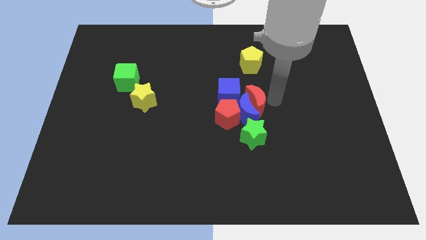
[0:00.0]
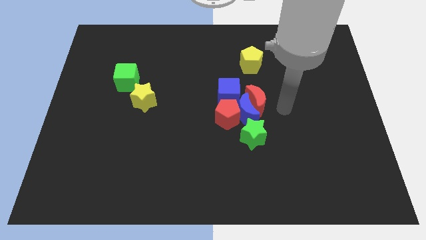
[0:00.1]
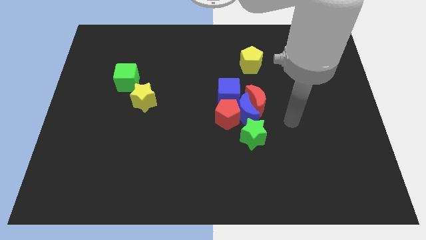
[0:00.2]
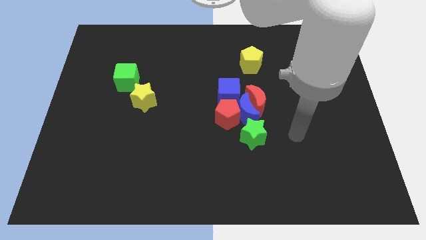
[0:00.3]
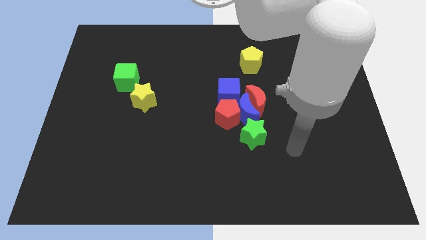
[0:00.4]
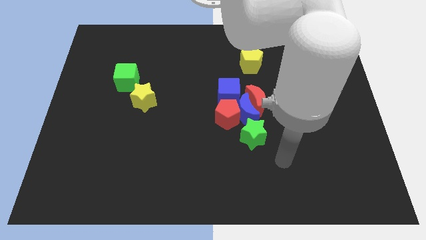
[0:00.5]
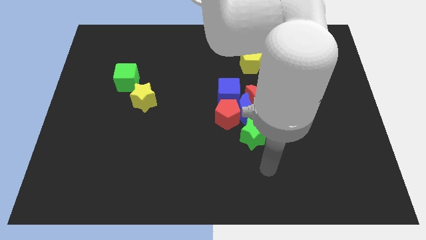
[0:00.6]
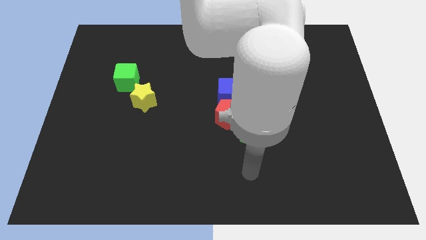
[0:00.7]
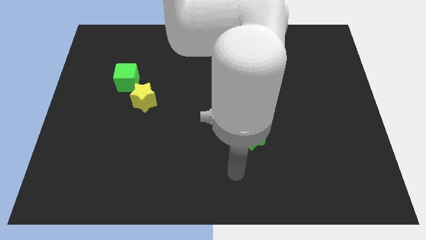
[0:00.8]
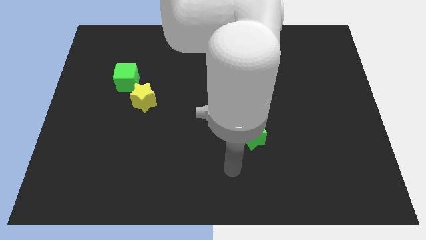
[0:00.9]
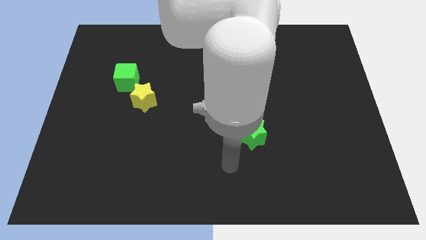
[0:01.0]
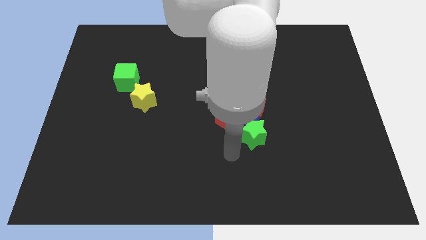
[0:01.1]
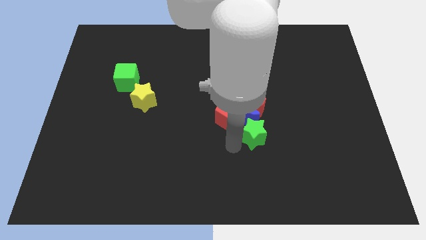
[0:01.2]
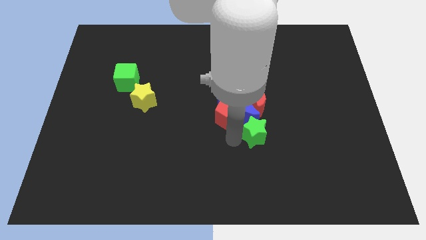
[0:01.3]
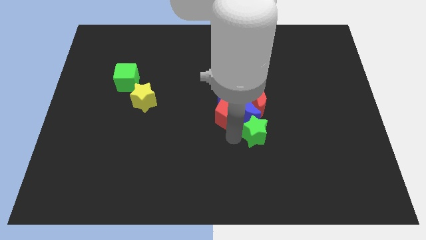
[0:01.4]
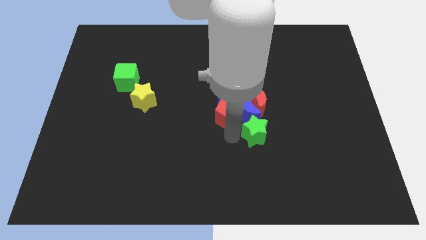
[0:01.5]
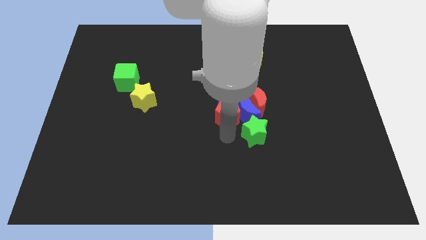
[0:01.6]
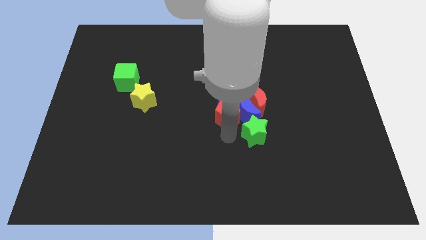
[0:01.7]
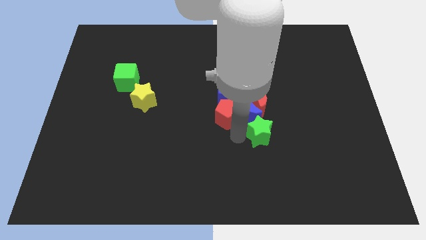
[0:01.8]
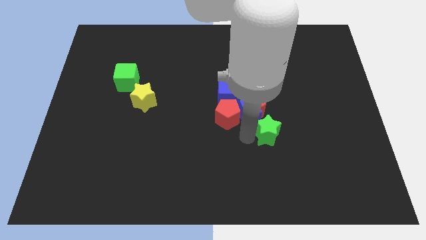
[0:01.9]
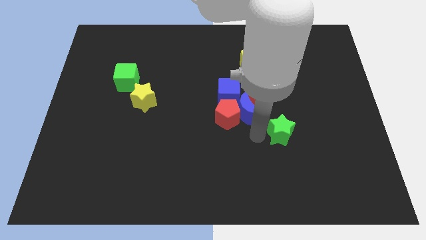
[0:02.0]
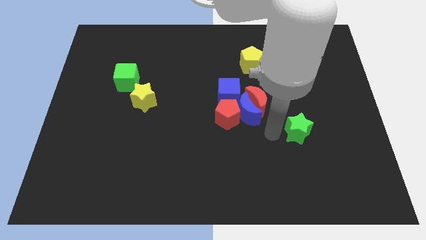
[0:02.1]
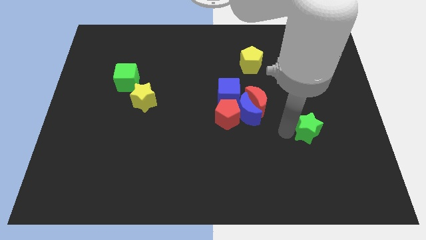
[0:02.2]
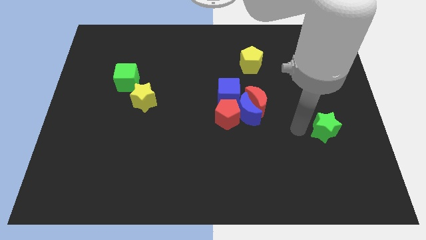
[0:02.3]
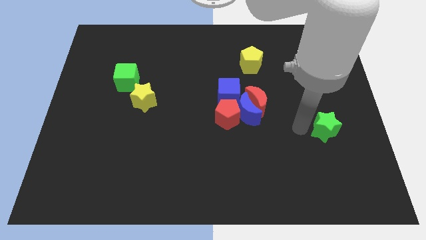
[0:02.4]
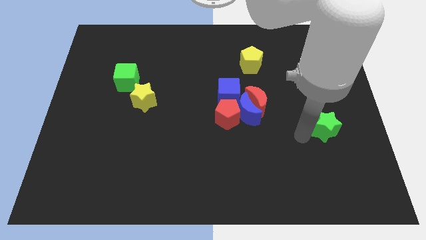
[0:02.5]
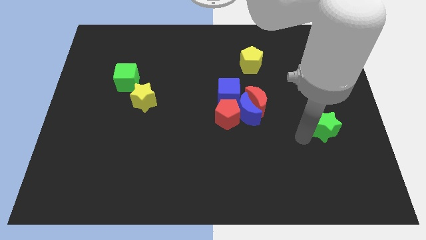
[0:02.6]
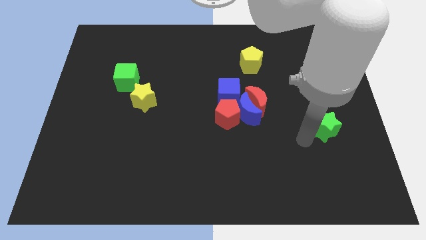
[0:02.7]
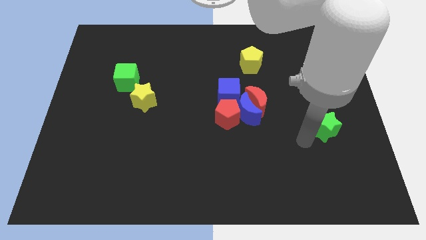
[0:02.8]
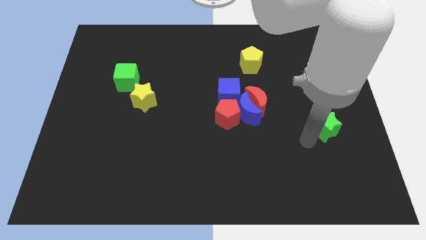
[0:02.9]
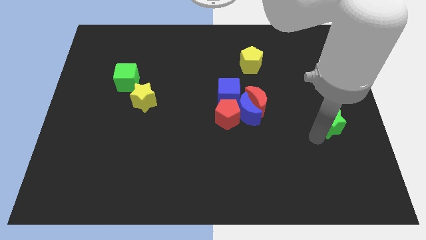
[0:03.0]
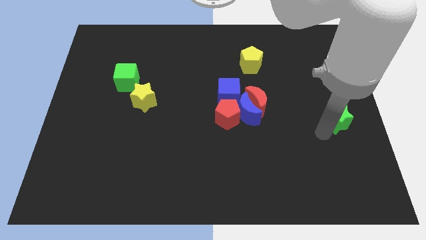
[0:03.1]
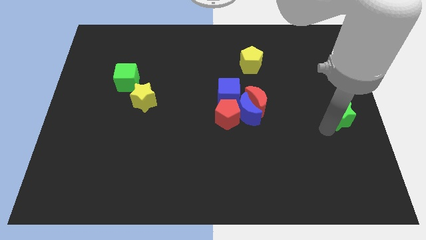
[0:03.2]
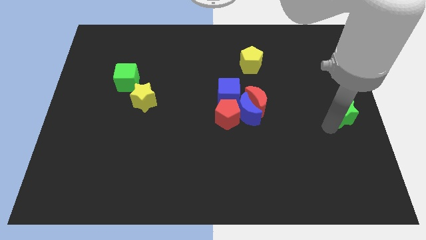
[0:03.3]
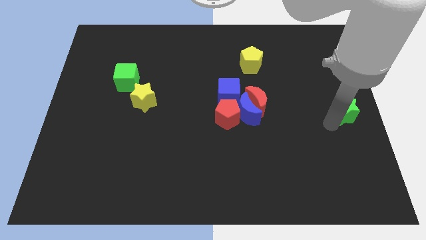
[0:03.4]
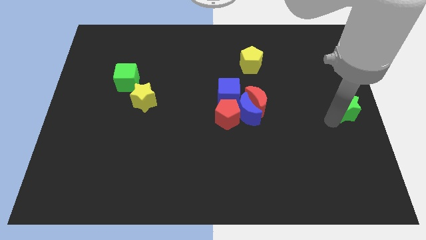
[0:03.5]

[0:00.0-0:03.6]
move the green star to the center right side of the board

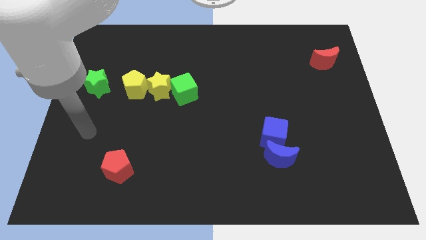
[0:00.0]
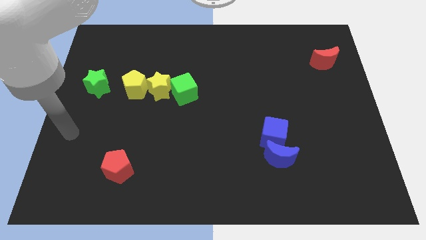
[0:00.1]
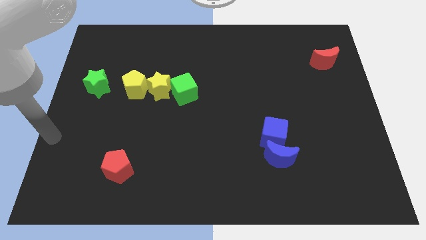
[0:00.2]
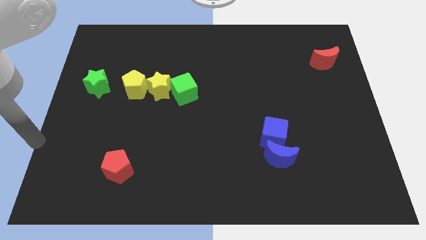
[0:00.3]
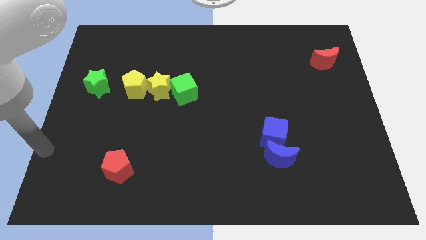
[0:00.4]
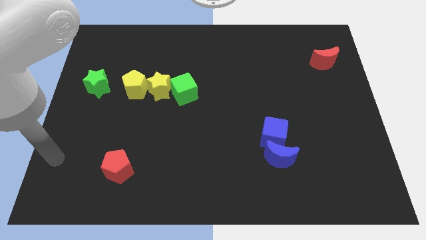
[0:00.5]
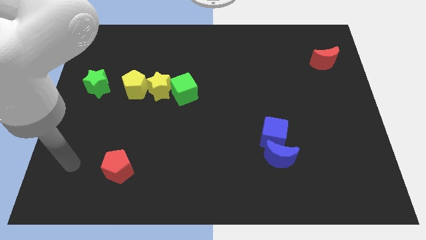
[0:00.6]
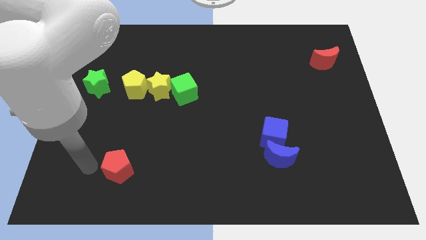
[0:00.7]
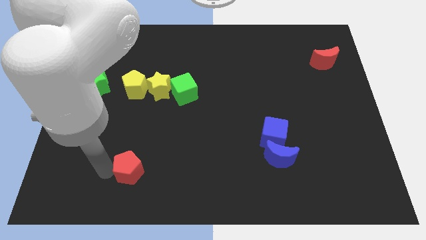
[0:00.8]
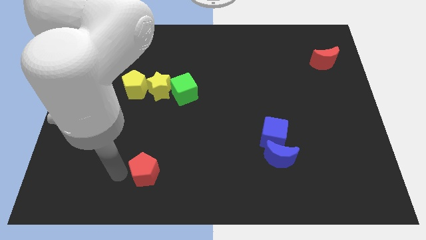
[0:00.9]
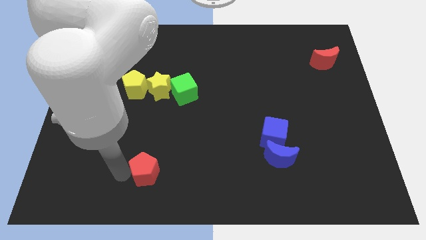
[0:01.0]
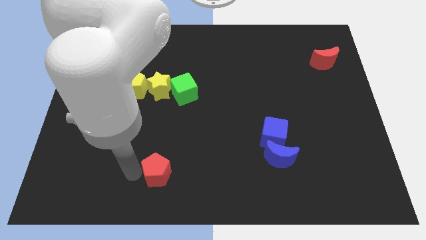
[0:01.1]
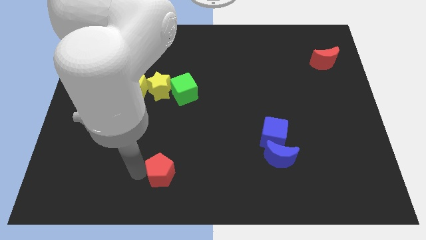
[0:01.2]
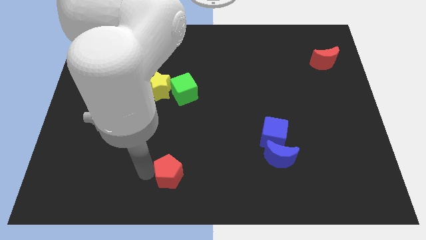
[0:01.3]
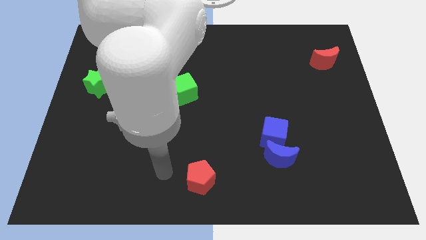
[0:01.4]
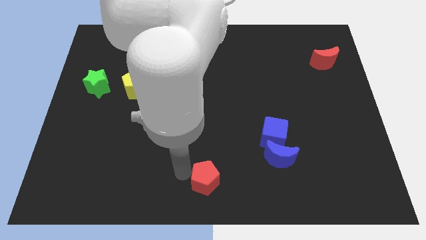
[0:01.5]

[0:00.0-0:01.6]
place the red pentagon to the bottom center of the board

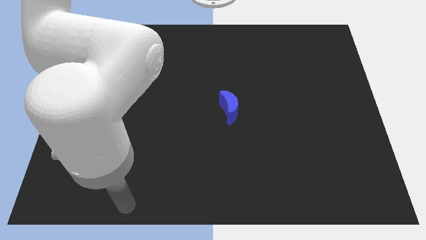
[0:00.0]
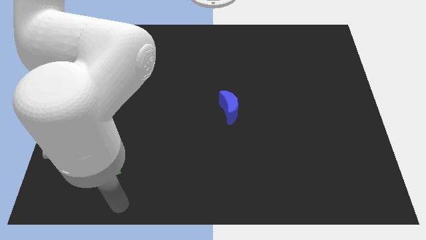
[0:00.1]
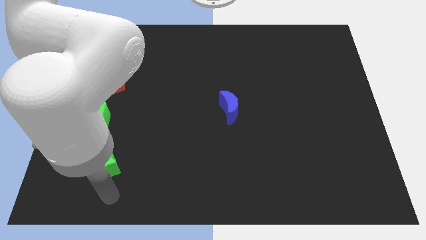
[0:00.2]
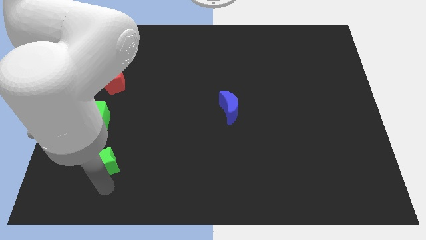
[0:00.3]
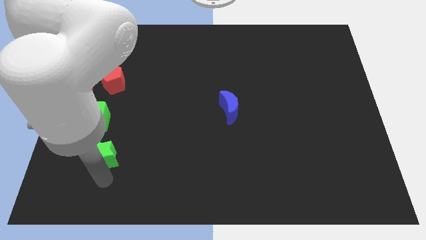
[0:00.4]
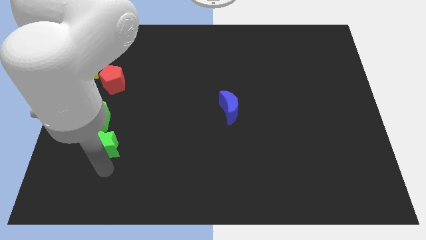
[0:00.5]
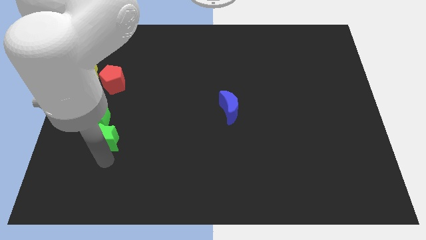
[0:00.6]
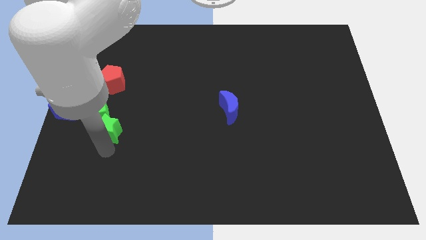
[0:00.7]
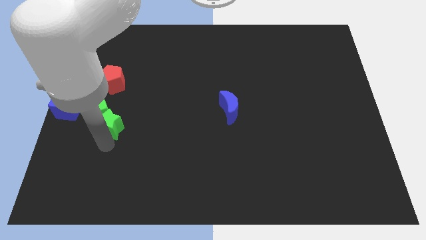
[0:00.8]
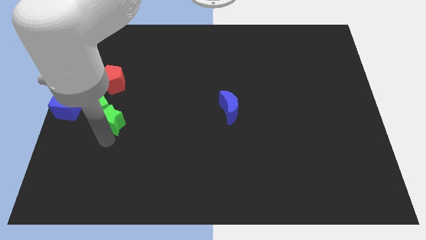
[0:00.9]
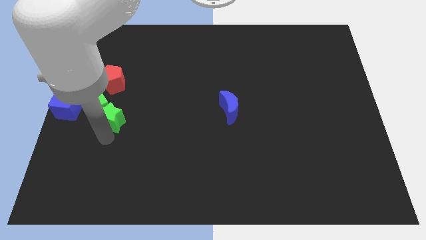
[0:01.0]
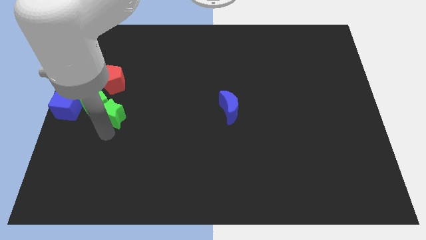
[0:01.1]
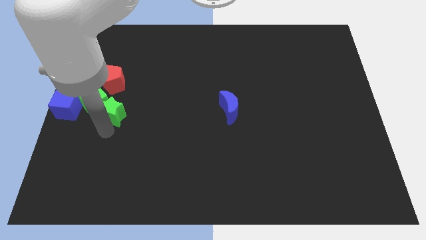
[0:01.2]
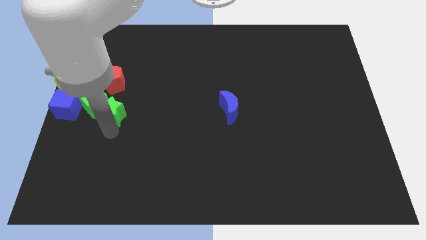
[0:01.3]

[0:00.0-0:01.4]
push the green star into the green cube

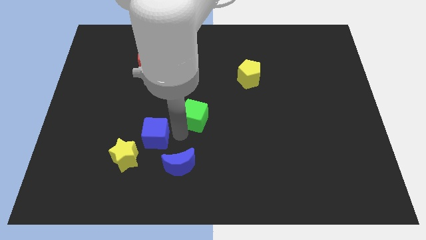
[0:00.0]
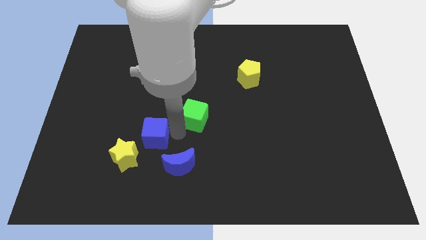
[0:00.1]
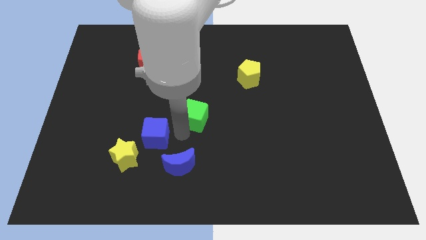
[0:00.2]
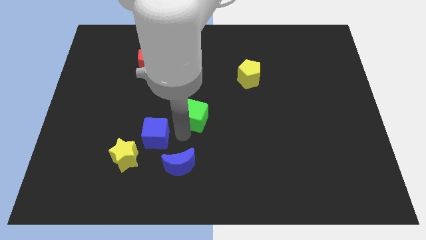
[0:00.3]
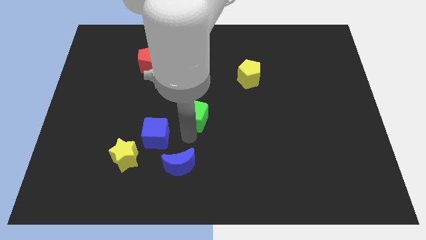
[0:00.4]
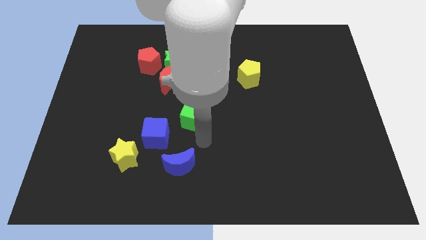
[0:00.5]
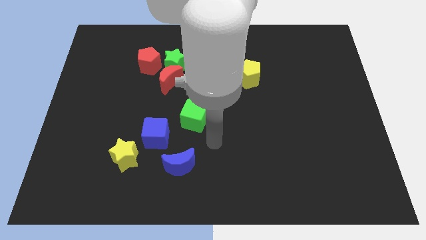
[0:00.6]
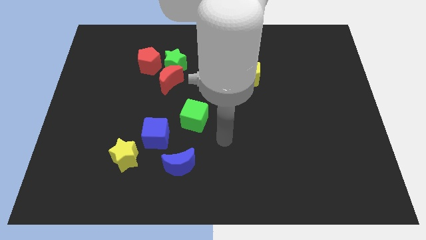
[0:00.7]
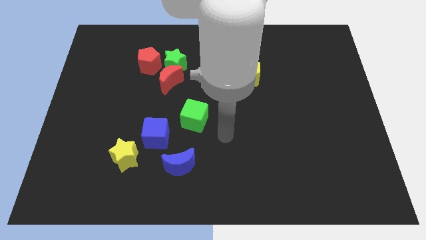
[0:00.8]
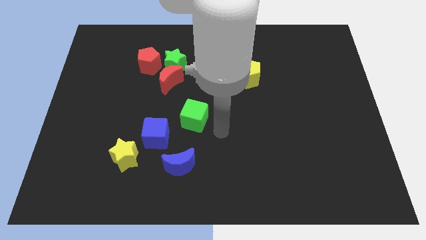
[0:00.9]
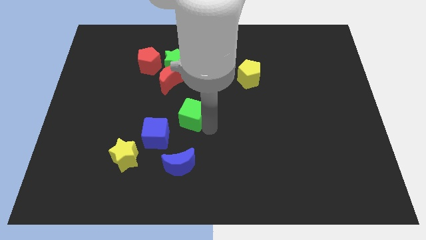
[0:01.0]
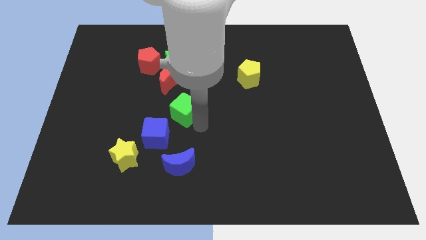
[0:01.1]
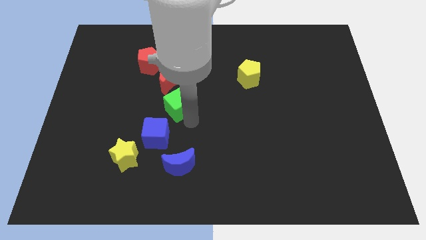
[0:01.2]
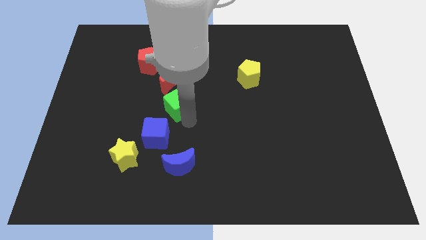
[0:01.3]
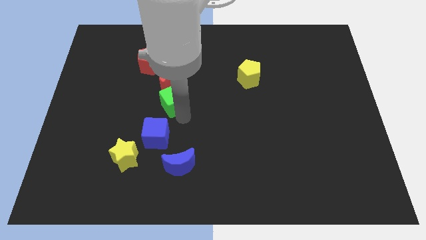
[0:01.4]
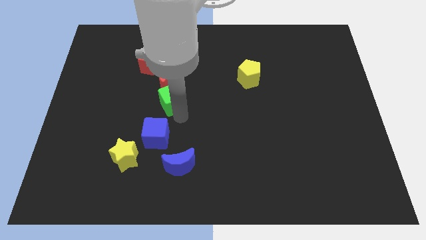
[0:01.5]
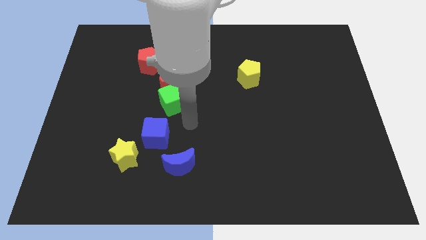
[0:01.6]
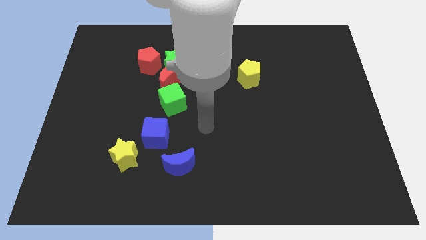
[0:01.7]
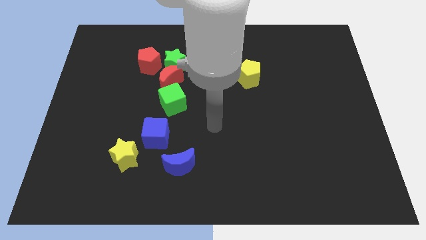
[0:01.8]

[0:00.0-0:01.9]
push the green cube to the bottom right of the red crescent

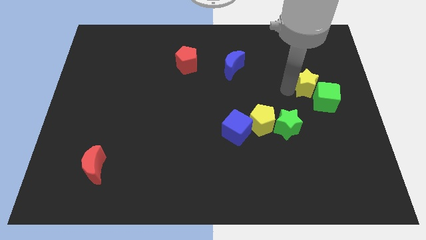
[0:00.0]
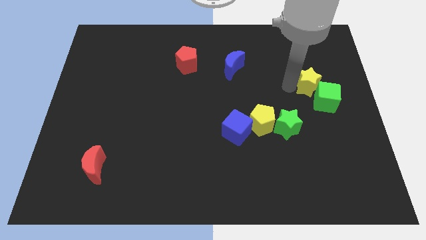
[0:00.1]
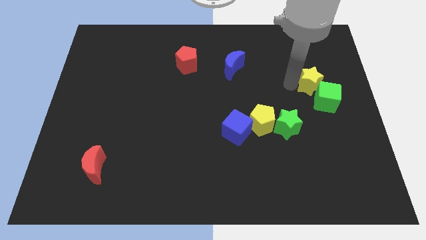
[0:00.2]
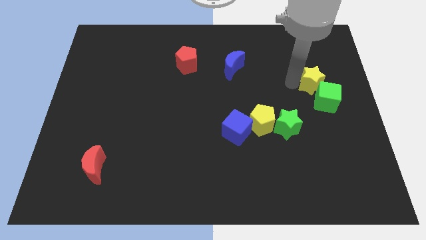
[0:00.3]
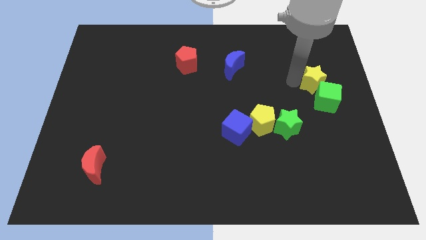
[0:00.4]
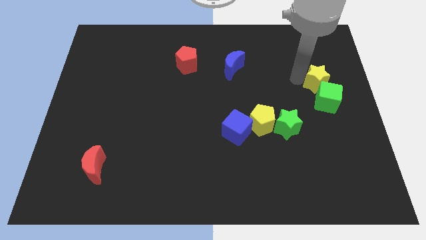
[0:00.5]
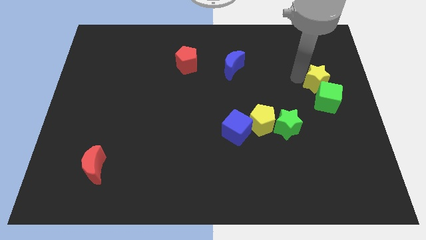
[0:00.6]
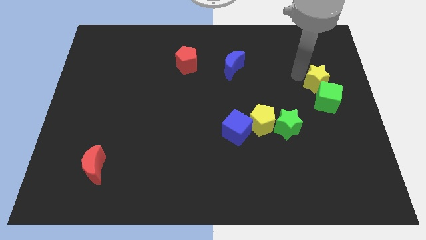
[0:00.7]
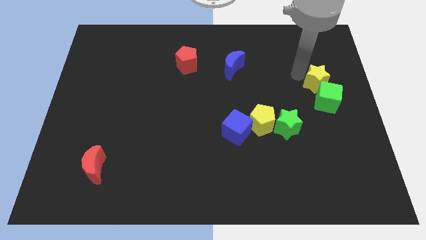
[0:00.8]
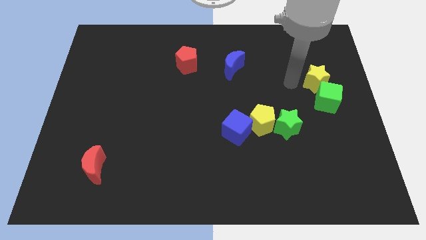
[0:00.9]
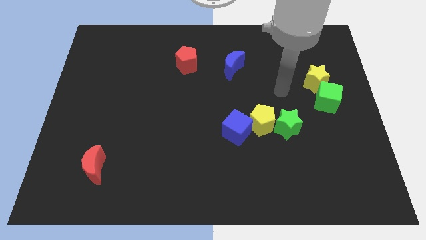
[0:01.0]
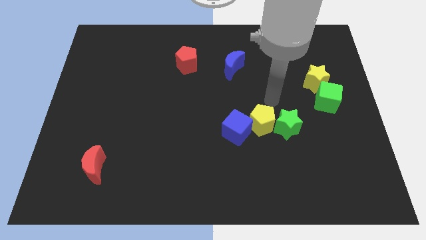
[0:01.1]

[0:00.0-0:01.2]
move the yellow star diagonal up left of green cube
